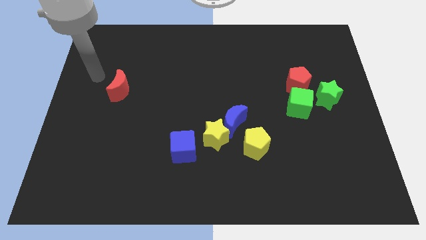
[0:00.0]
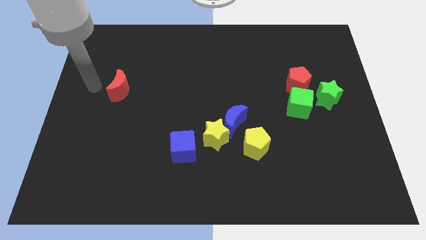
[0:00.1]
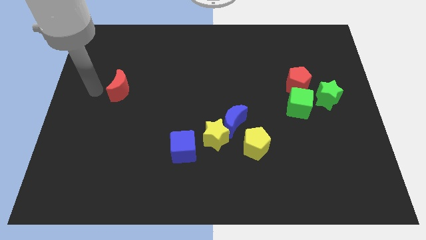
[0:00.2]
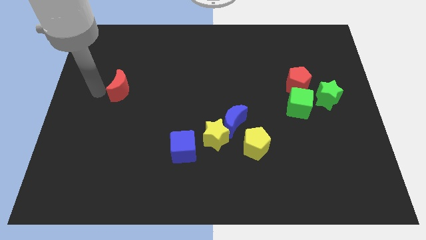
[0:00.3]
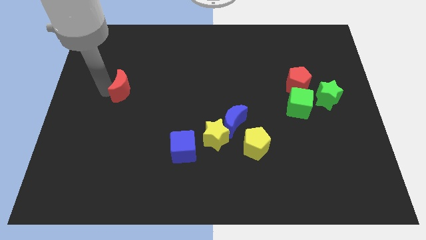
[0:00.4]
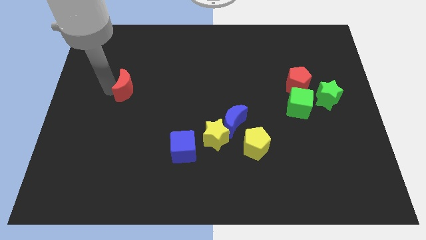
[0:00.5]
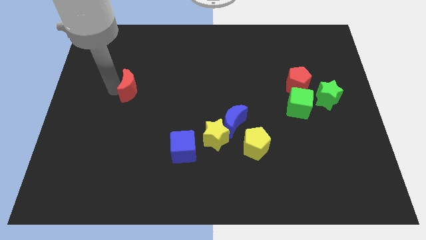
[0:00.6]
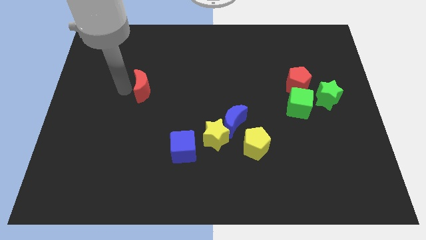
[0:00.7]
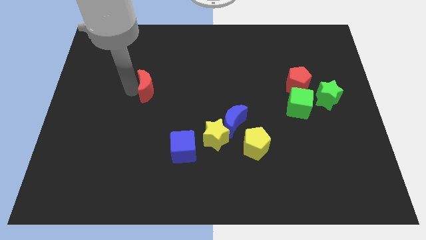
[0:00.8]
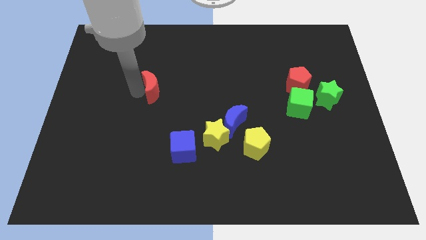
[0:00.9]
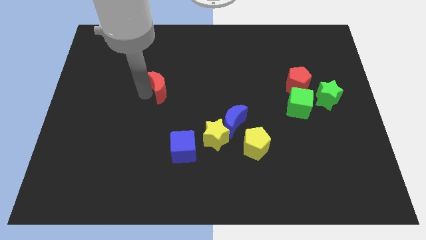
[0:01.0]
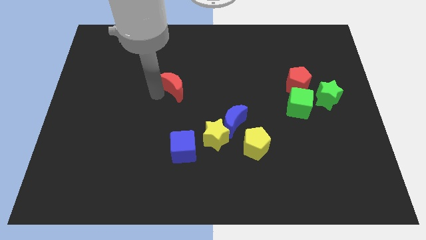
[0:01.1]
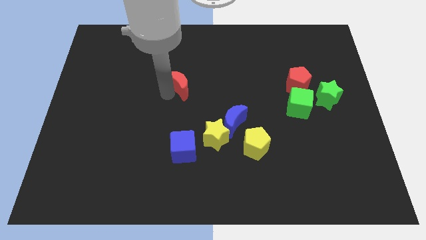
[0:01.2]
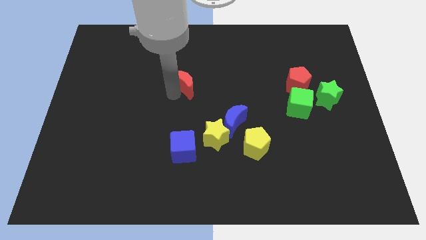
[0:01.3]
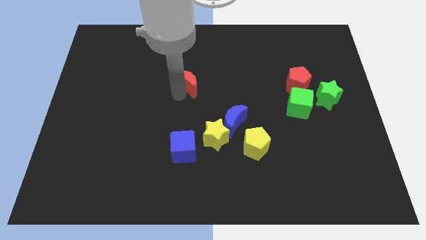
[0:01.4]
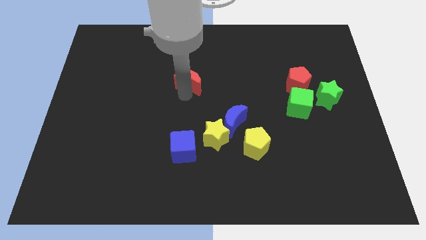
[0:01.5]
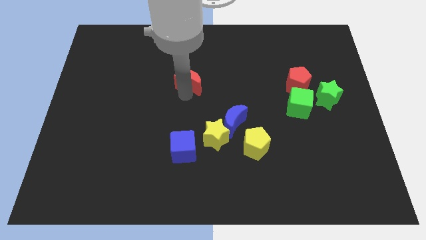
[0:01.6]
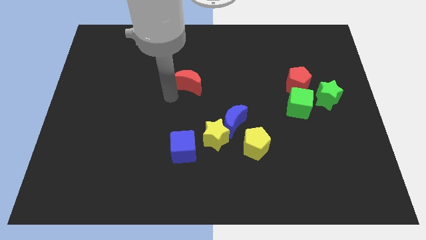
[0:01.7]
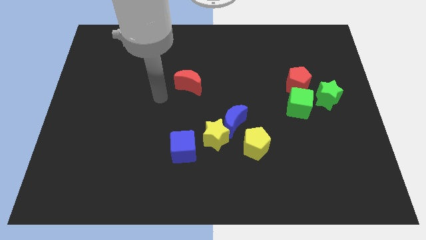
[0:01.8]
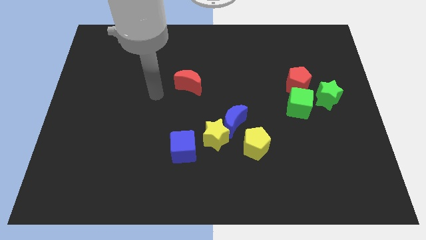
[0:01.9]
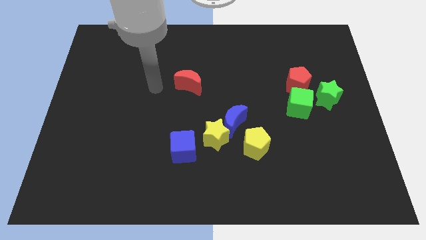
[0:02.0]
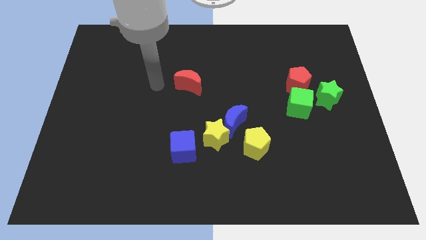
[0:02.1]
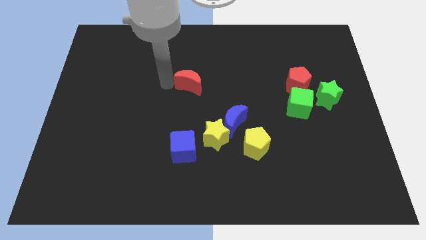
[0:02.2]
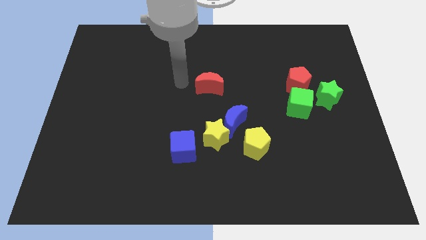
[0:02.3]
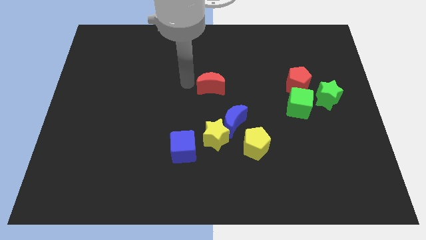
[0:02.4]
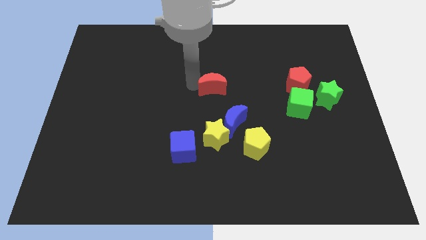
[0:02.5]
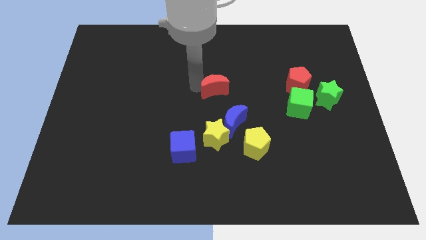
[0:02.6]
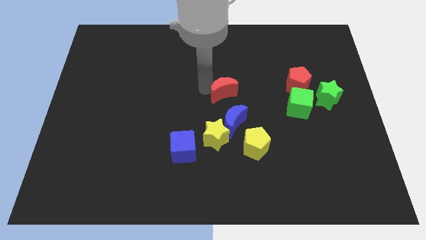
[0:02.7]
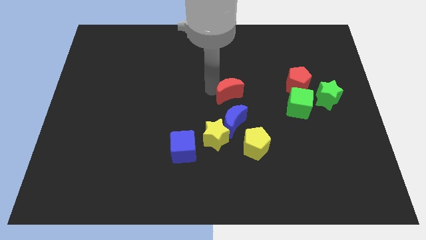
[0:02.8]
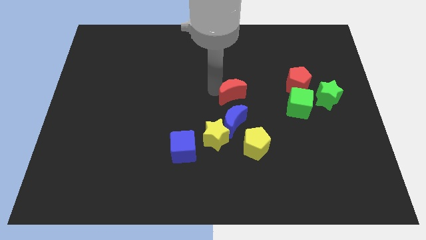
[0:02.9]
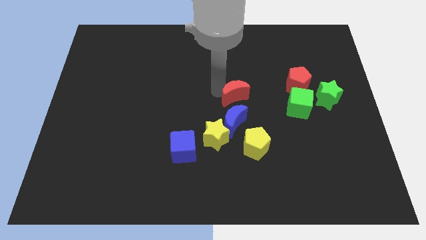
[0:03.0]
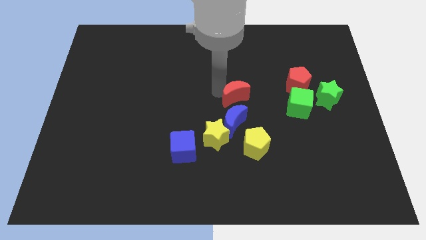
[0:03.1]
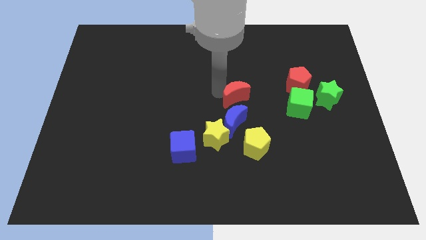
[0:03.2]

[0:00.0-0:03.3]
place the red moon above the blue moon

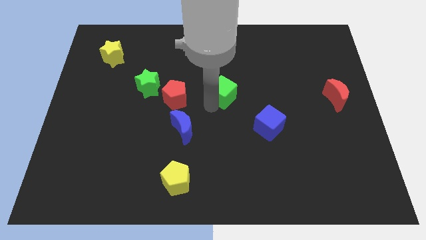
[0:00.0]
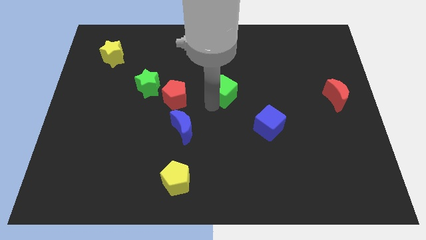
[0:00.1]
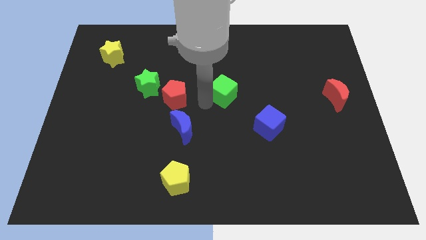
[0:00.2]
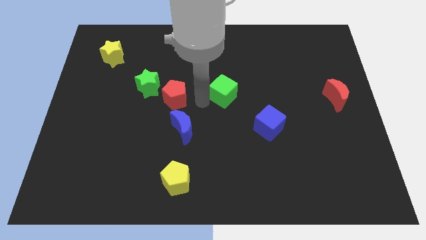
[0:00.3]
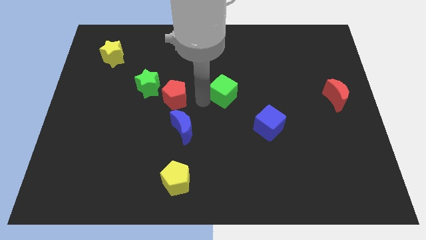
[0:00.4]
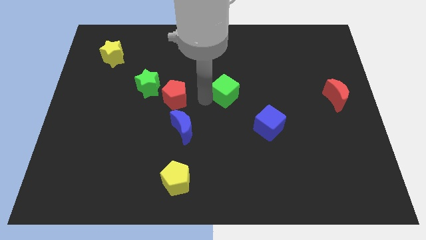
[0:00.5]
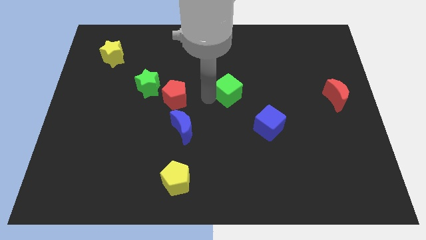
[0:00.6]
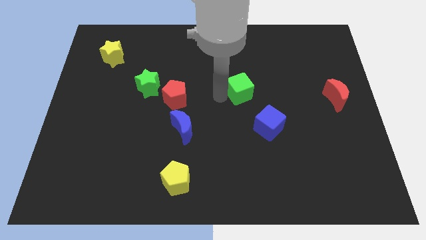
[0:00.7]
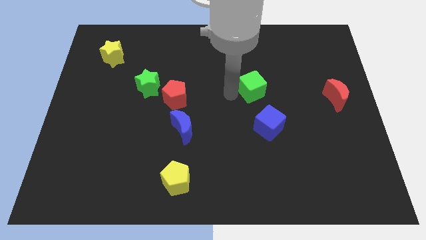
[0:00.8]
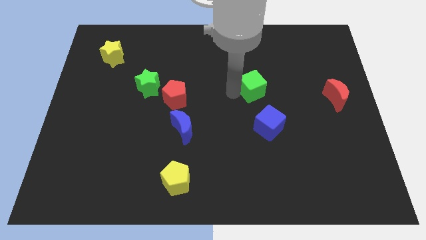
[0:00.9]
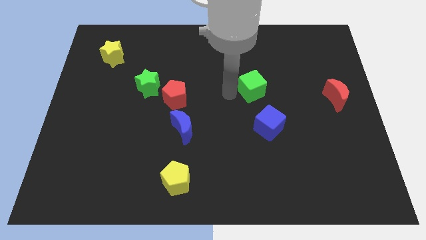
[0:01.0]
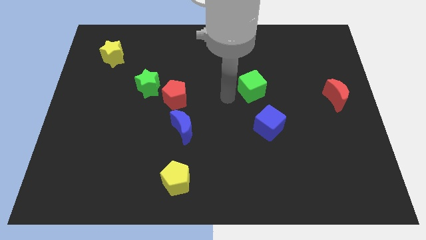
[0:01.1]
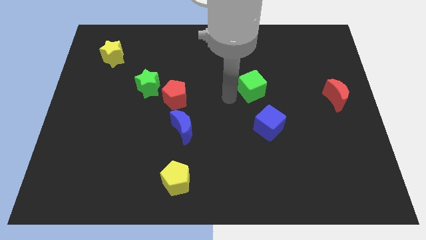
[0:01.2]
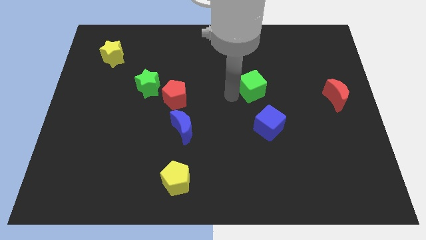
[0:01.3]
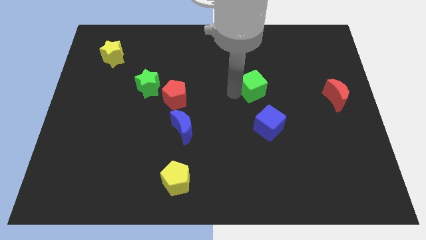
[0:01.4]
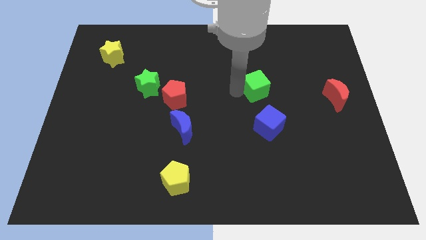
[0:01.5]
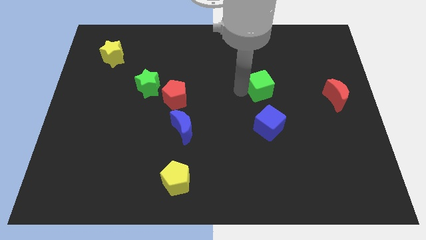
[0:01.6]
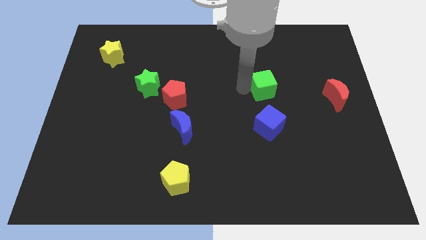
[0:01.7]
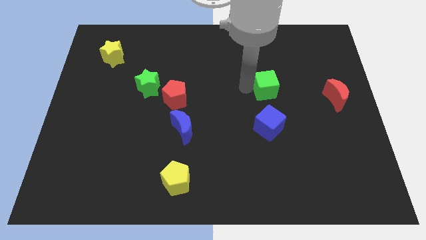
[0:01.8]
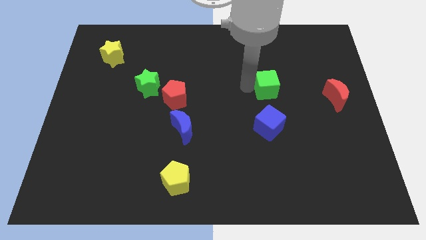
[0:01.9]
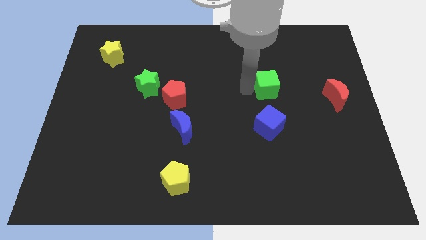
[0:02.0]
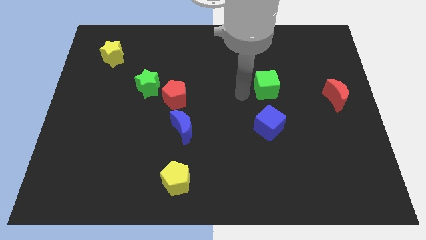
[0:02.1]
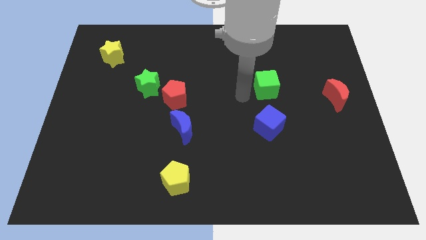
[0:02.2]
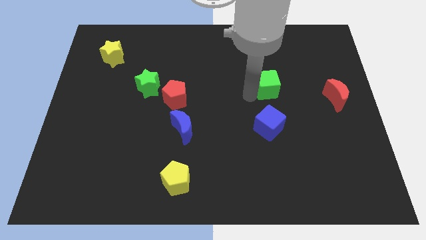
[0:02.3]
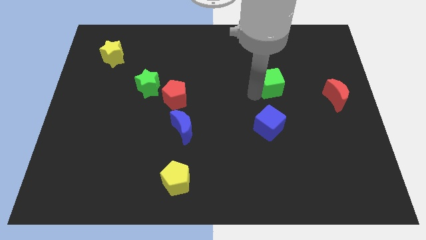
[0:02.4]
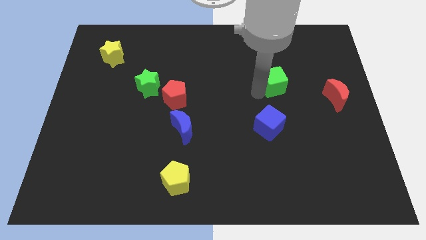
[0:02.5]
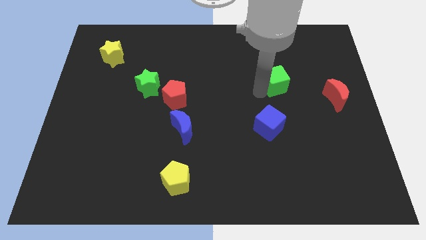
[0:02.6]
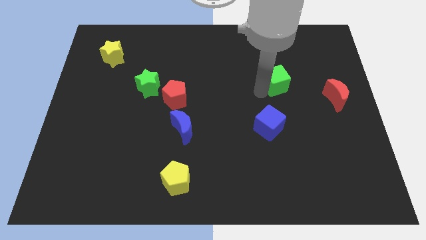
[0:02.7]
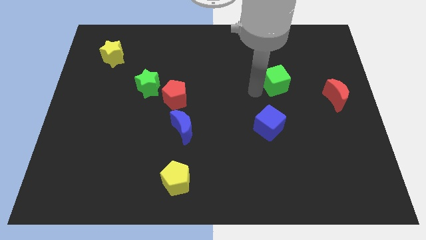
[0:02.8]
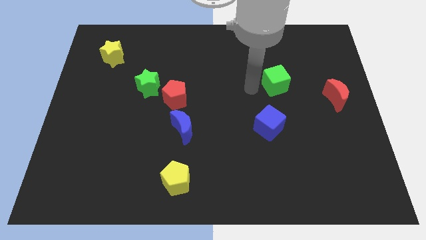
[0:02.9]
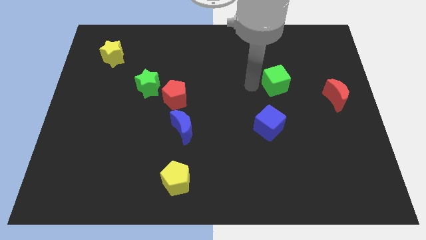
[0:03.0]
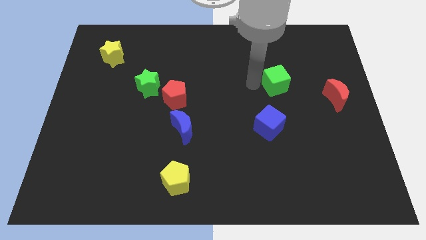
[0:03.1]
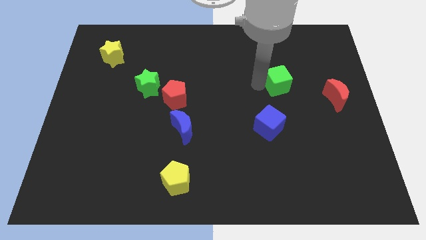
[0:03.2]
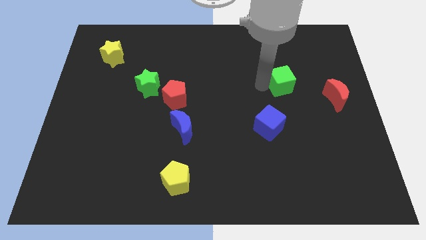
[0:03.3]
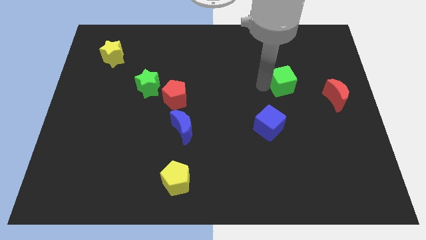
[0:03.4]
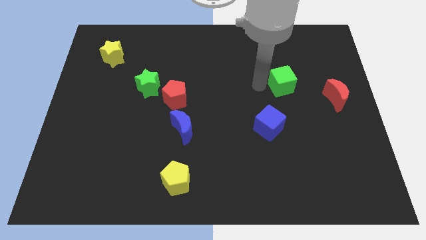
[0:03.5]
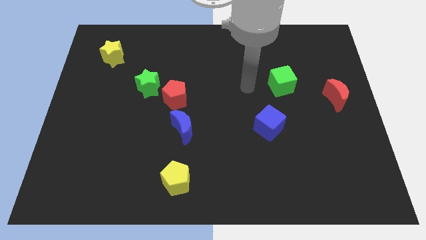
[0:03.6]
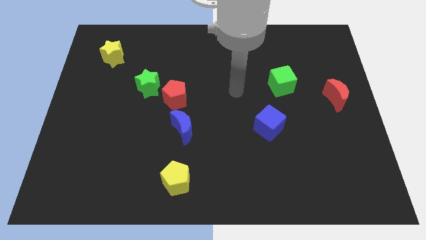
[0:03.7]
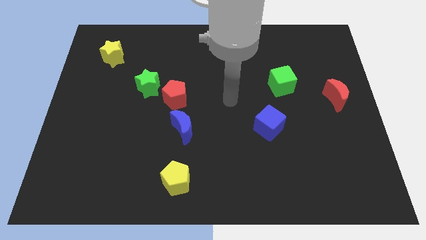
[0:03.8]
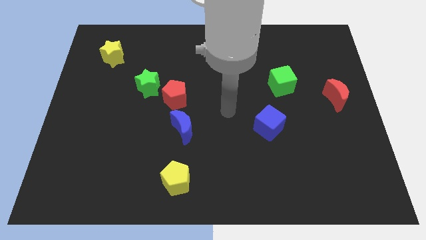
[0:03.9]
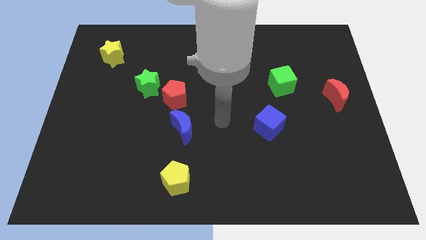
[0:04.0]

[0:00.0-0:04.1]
slide green cube to the left of red moon

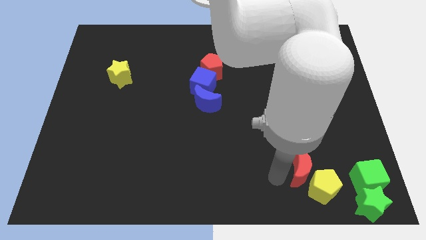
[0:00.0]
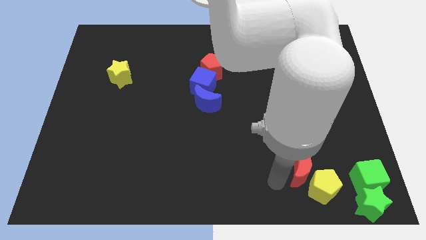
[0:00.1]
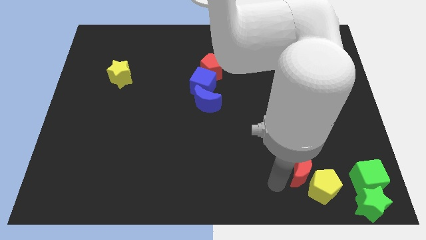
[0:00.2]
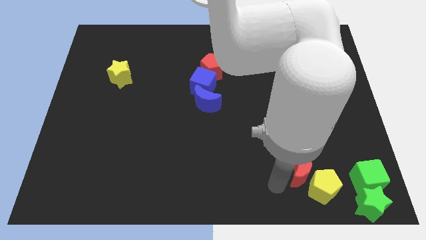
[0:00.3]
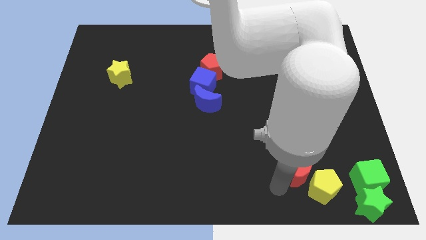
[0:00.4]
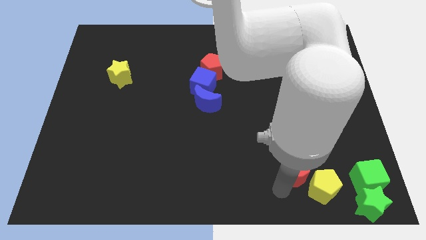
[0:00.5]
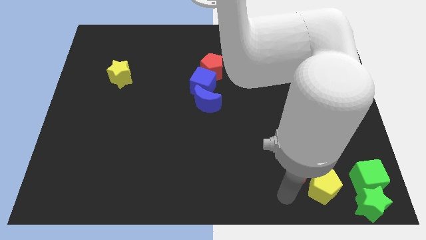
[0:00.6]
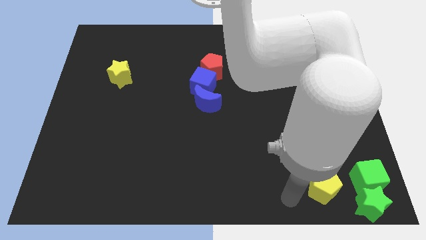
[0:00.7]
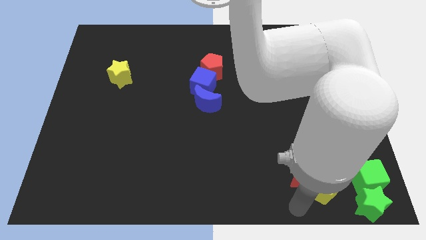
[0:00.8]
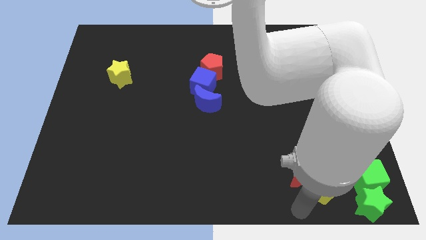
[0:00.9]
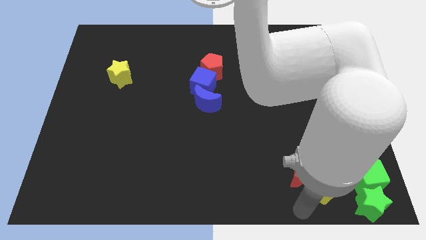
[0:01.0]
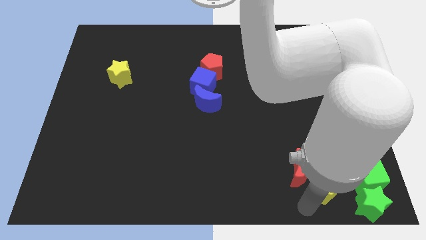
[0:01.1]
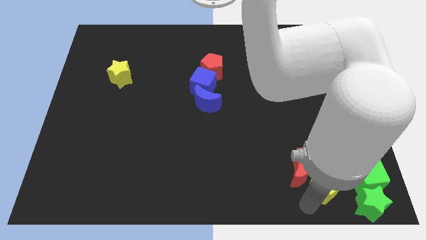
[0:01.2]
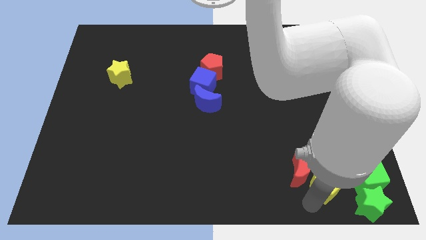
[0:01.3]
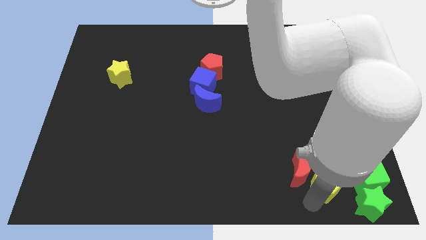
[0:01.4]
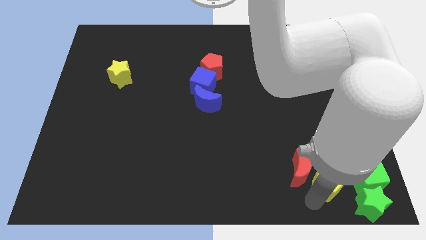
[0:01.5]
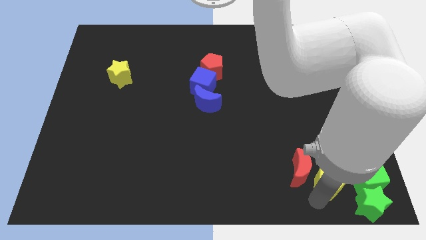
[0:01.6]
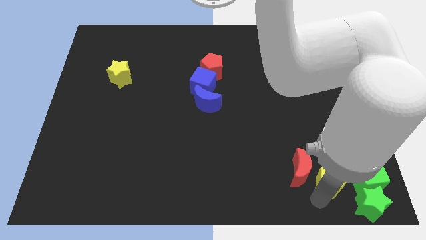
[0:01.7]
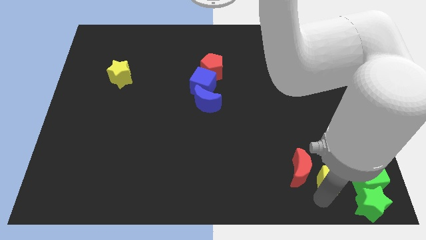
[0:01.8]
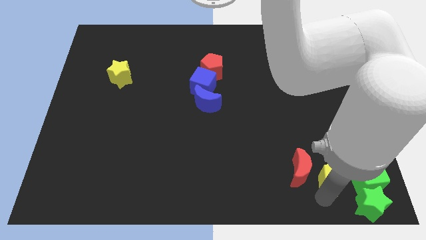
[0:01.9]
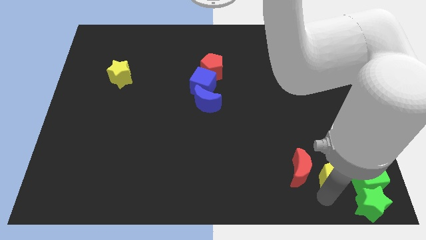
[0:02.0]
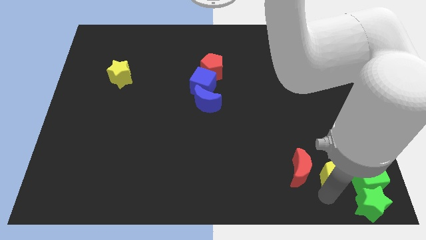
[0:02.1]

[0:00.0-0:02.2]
place the yellow pentagon in between red moon and green cube
